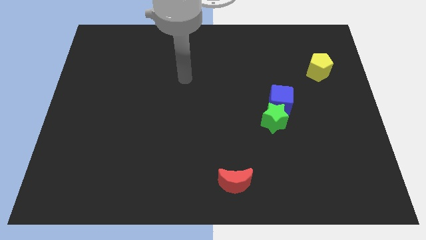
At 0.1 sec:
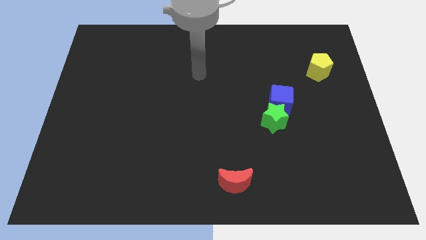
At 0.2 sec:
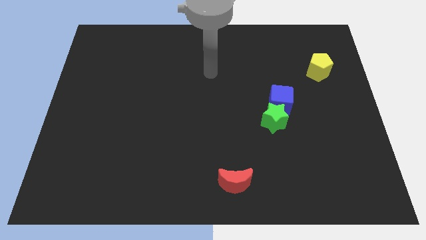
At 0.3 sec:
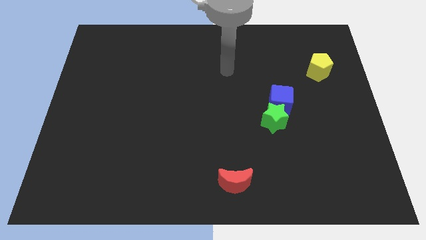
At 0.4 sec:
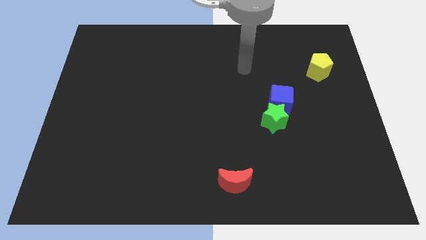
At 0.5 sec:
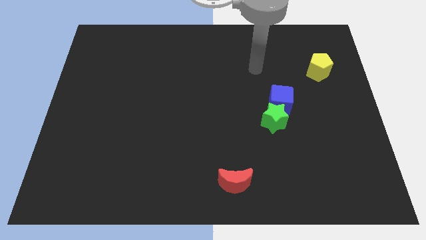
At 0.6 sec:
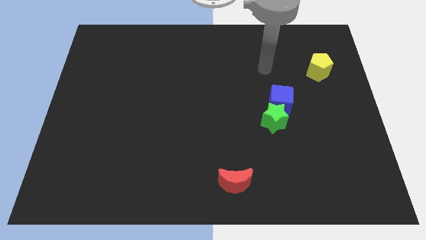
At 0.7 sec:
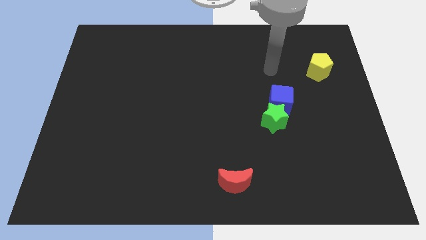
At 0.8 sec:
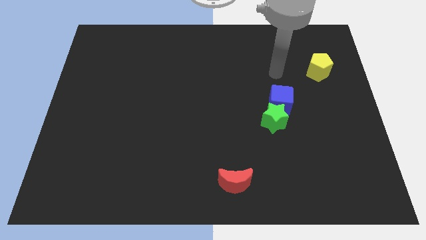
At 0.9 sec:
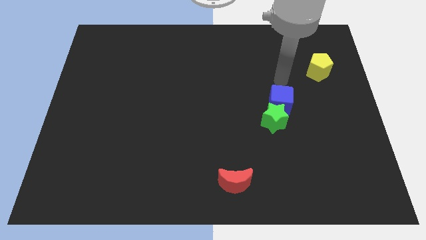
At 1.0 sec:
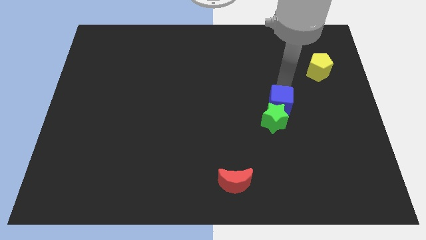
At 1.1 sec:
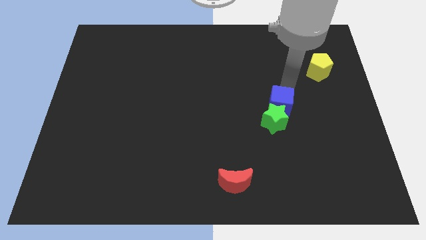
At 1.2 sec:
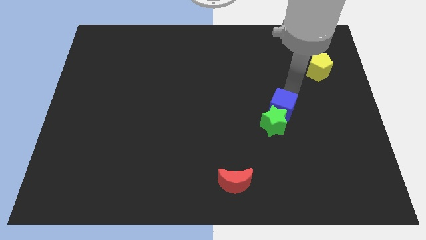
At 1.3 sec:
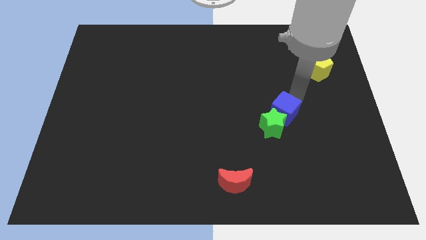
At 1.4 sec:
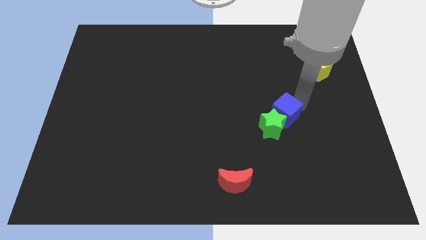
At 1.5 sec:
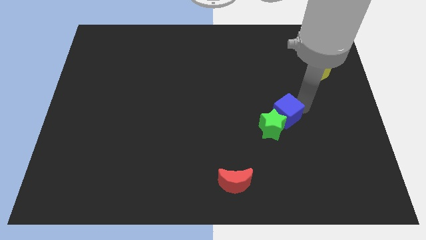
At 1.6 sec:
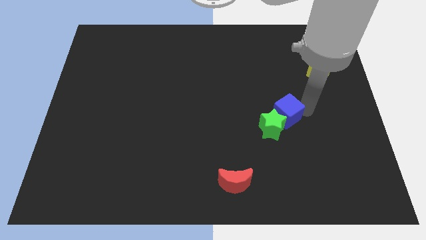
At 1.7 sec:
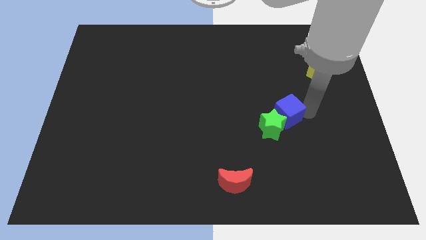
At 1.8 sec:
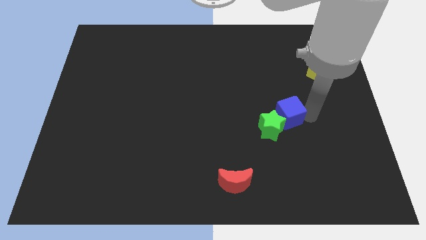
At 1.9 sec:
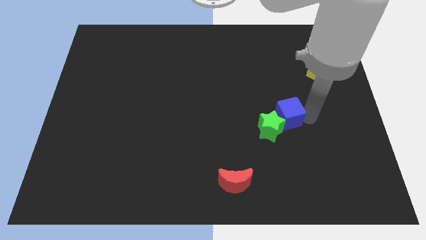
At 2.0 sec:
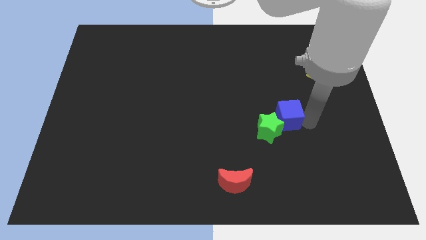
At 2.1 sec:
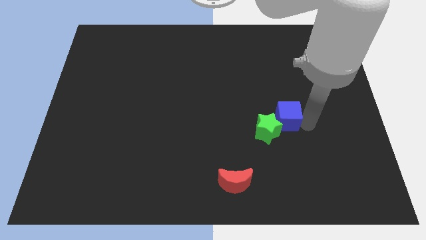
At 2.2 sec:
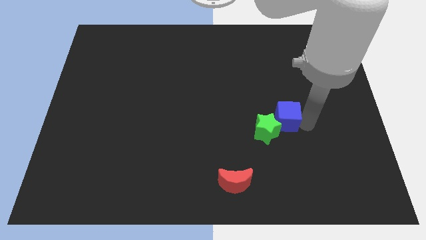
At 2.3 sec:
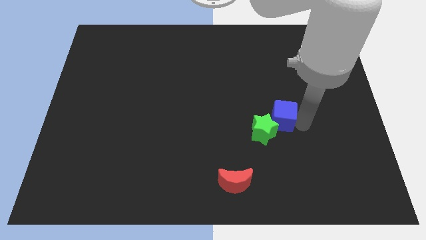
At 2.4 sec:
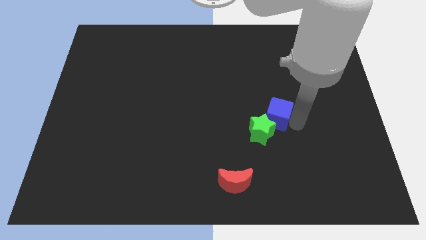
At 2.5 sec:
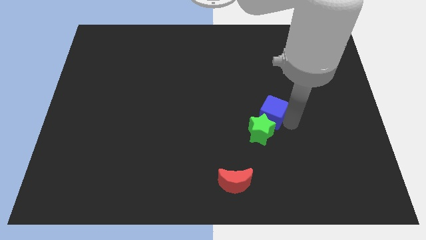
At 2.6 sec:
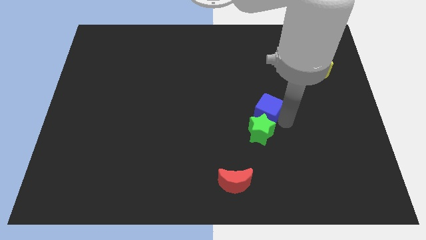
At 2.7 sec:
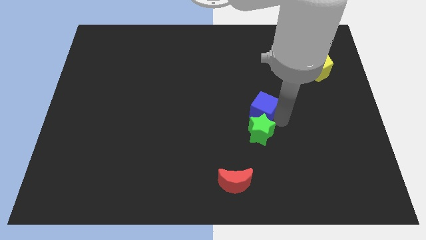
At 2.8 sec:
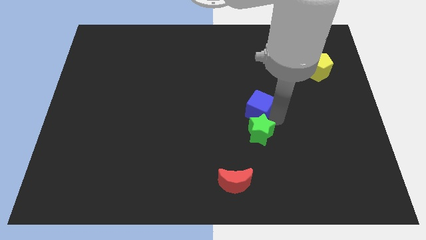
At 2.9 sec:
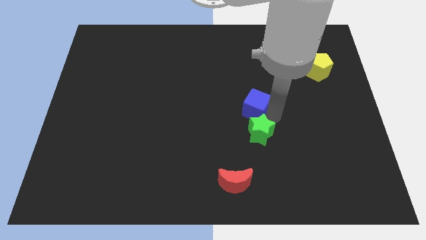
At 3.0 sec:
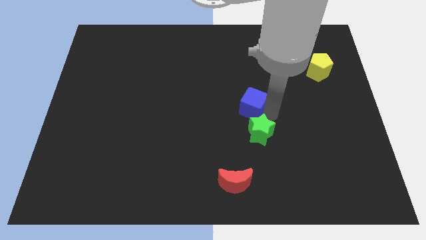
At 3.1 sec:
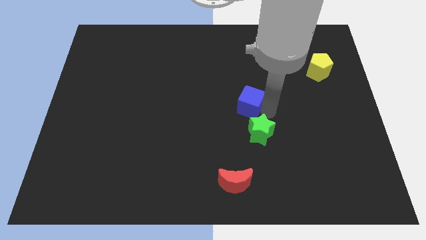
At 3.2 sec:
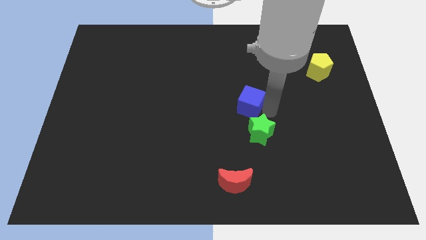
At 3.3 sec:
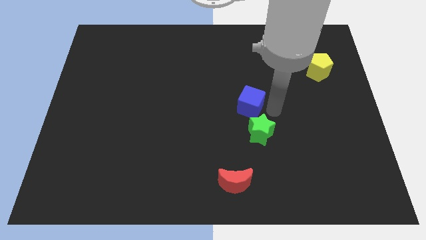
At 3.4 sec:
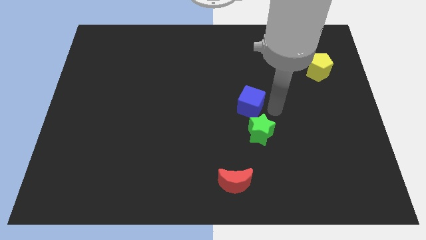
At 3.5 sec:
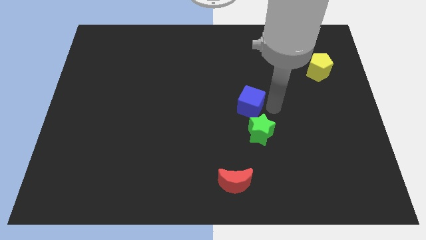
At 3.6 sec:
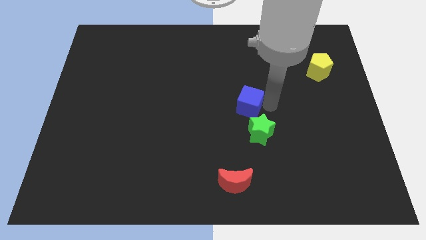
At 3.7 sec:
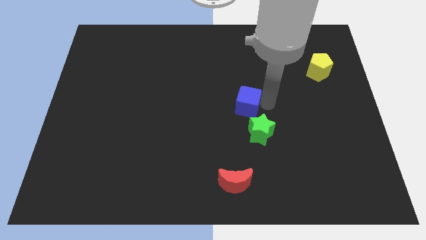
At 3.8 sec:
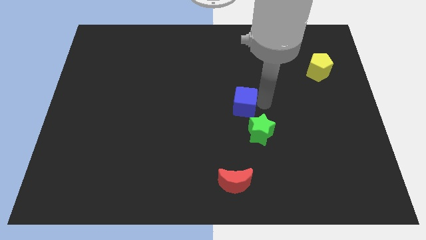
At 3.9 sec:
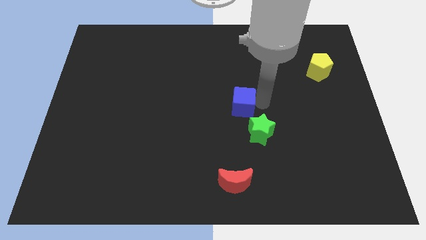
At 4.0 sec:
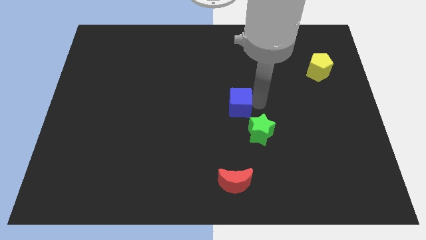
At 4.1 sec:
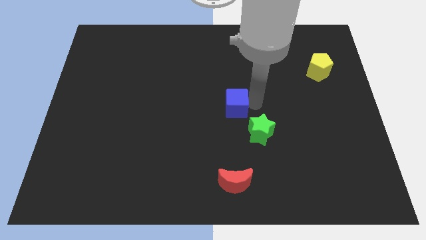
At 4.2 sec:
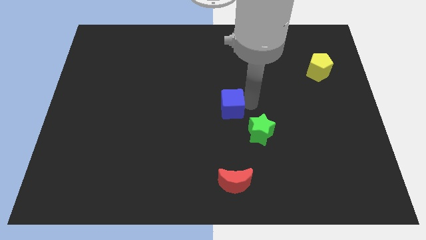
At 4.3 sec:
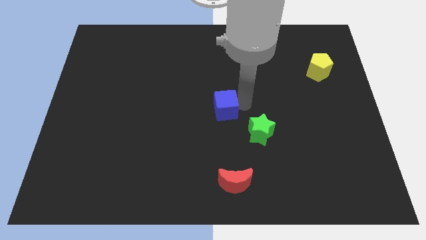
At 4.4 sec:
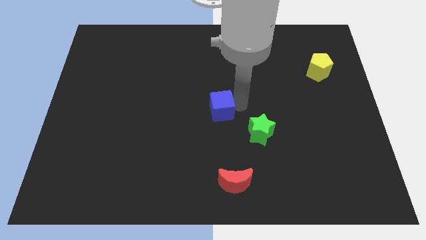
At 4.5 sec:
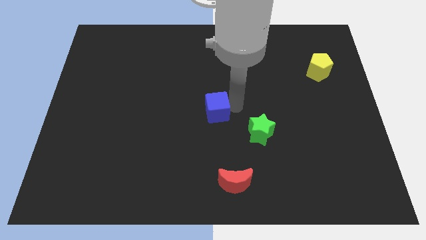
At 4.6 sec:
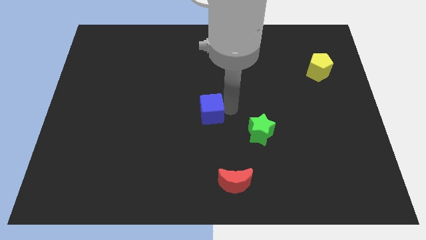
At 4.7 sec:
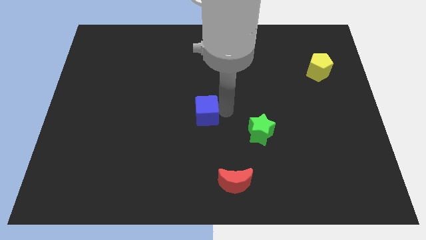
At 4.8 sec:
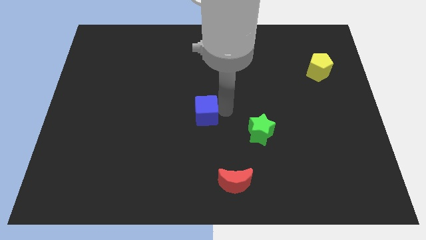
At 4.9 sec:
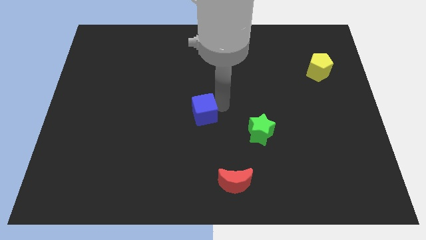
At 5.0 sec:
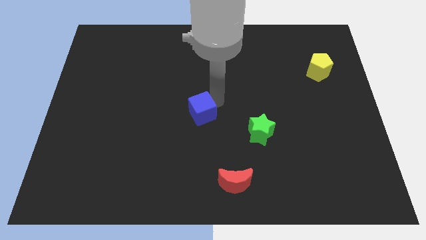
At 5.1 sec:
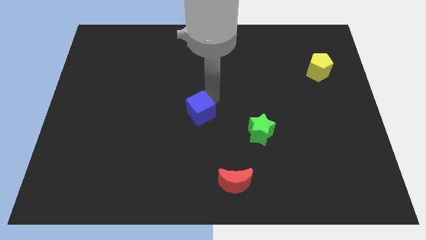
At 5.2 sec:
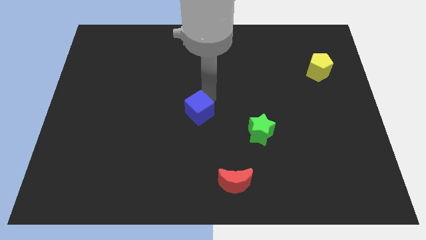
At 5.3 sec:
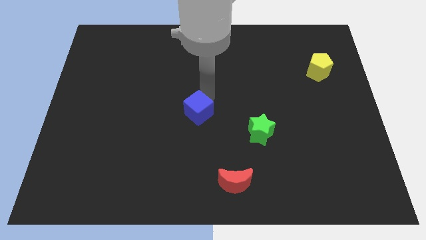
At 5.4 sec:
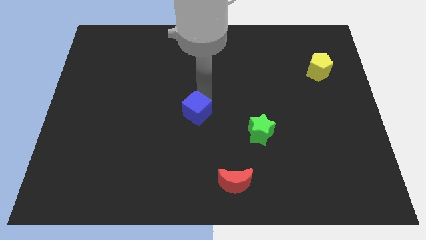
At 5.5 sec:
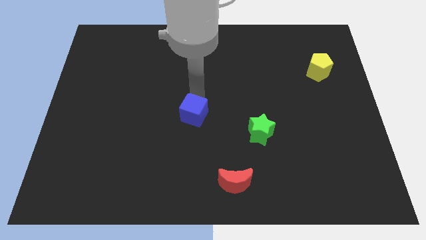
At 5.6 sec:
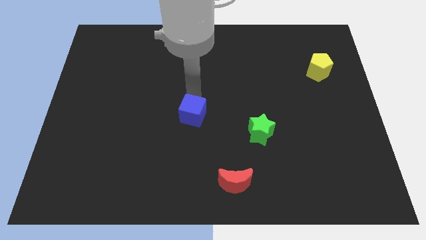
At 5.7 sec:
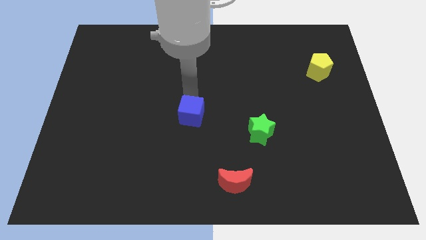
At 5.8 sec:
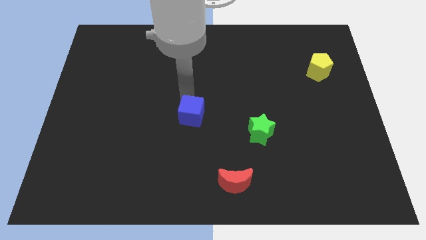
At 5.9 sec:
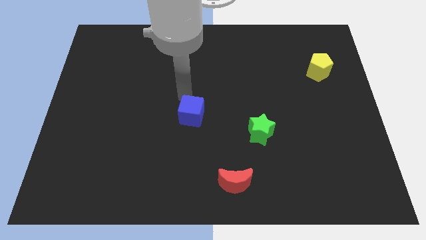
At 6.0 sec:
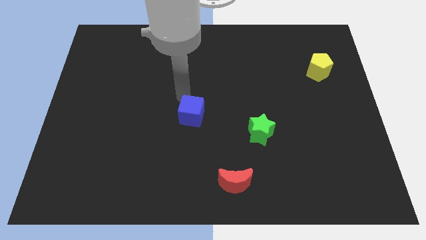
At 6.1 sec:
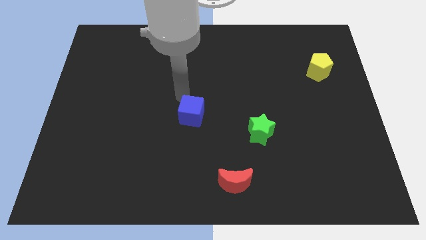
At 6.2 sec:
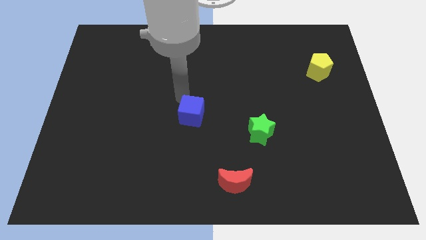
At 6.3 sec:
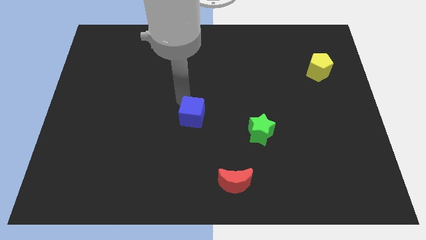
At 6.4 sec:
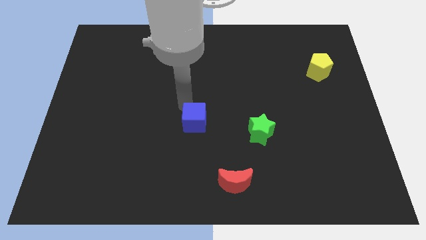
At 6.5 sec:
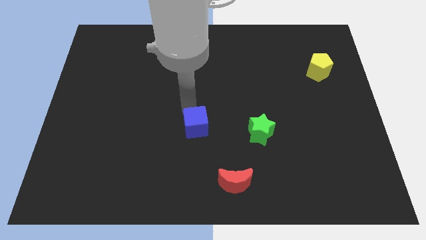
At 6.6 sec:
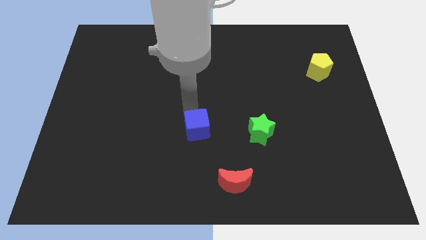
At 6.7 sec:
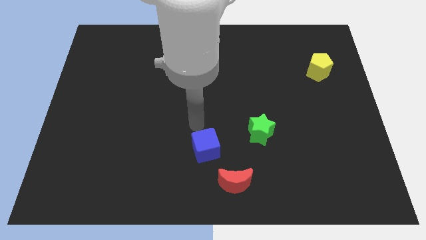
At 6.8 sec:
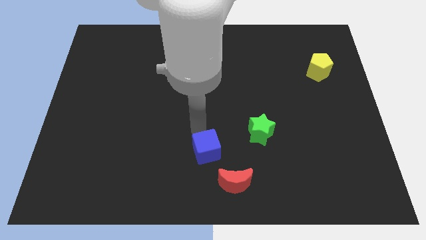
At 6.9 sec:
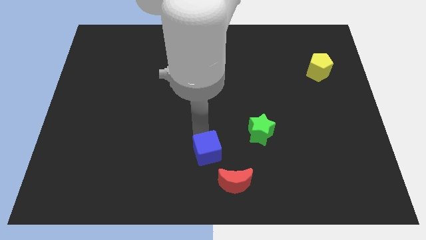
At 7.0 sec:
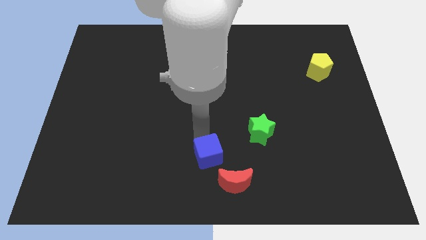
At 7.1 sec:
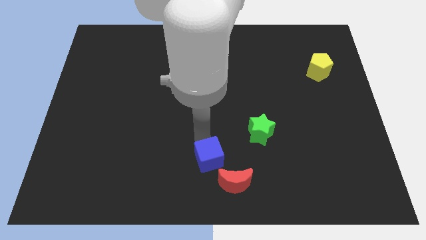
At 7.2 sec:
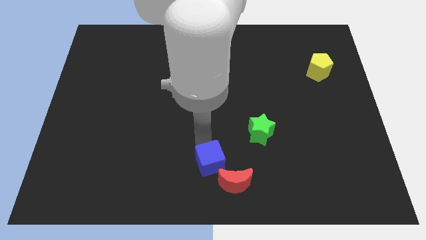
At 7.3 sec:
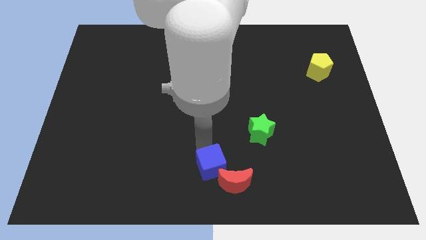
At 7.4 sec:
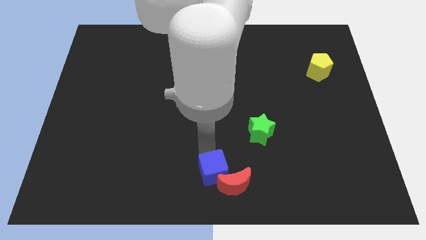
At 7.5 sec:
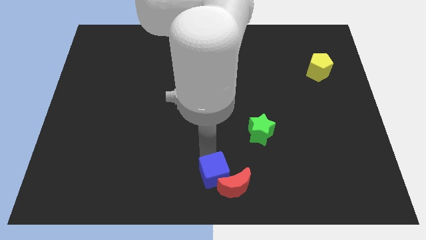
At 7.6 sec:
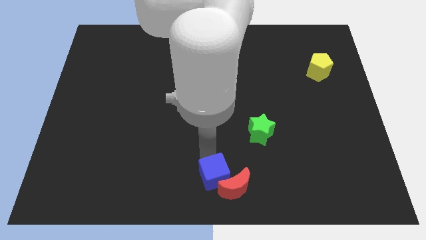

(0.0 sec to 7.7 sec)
move the blue cube next to the red moon

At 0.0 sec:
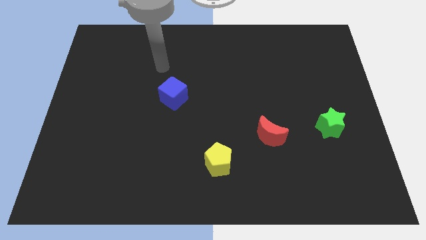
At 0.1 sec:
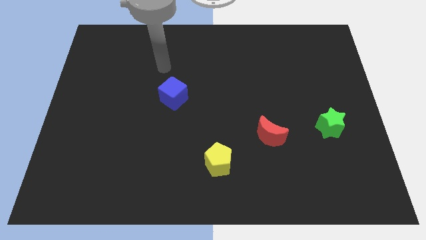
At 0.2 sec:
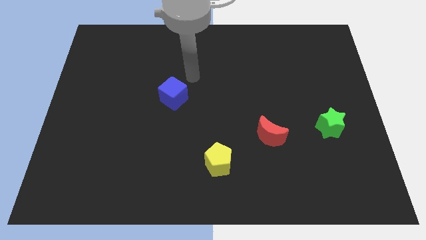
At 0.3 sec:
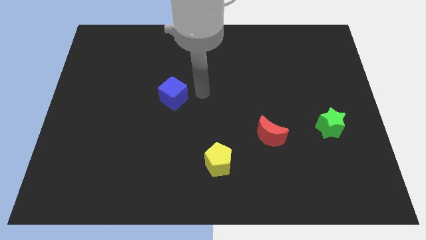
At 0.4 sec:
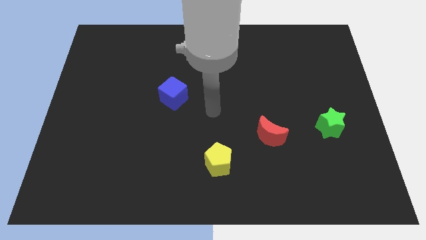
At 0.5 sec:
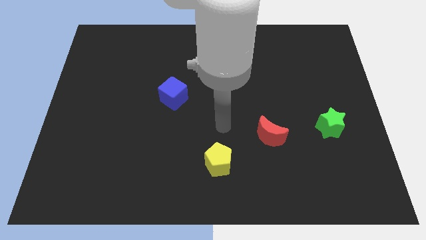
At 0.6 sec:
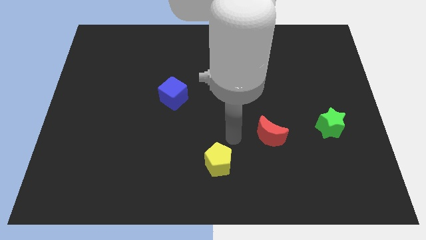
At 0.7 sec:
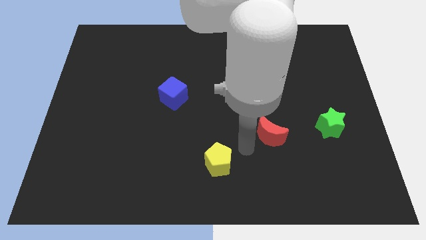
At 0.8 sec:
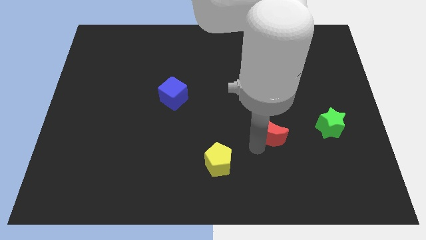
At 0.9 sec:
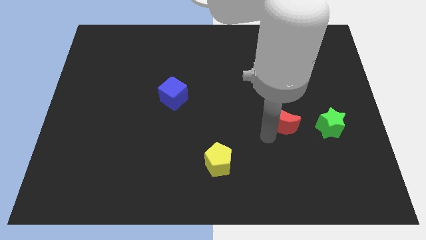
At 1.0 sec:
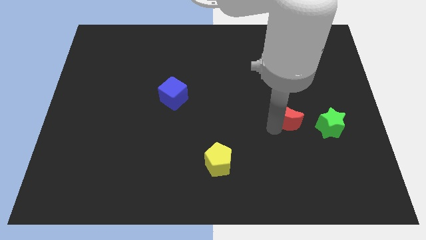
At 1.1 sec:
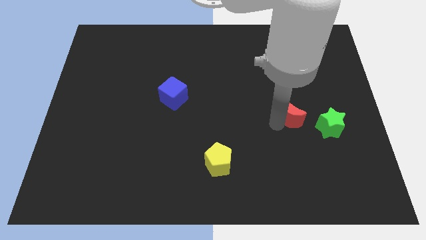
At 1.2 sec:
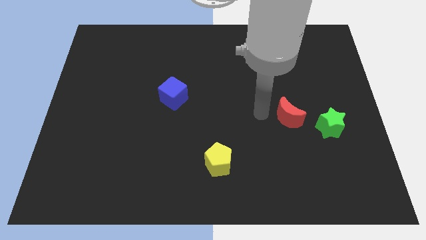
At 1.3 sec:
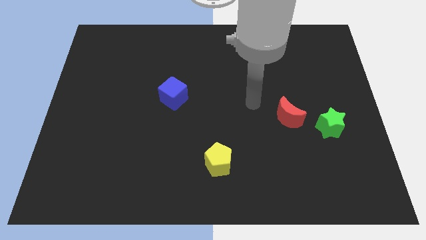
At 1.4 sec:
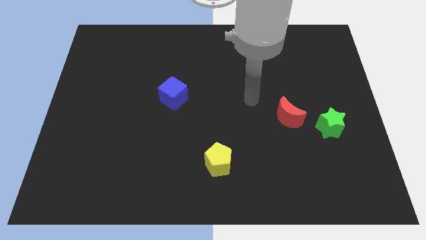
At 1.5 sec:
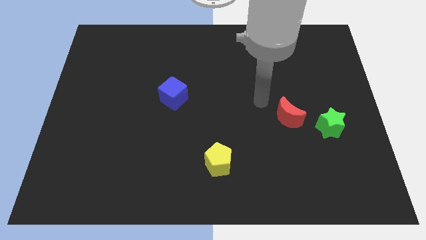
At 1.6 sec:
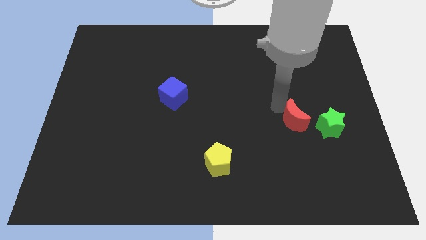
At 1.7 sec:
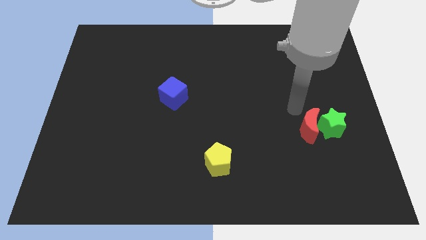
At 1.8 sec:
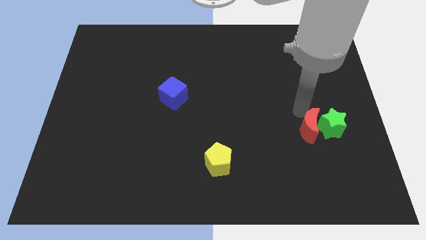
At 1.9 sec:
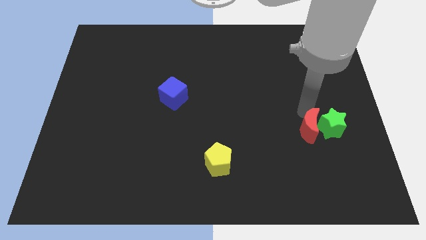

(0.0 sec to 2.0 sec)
push the red moon to the star
